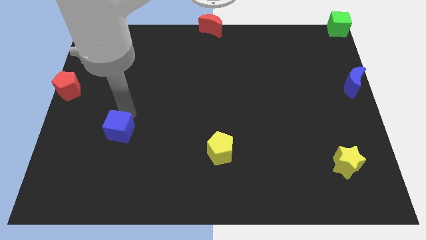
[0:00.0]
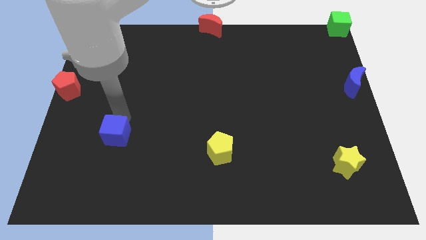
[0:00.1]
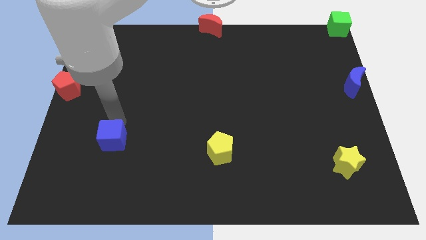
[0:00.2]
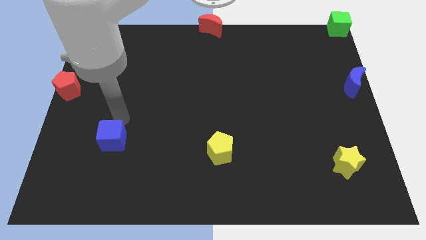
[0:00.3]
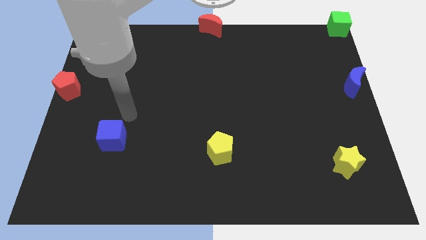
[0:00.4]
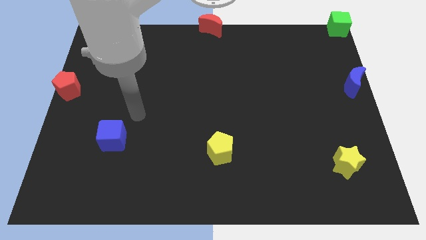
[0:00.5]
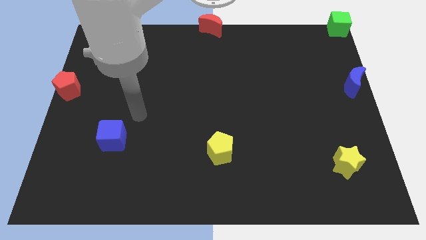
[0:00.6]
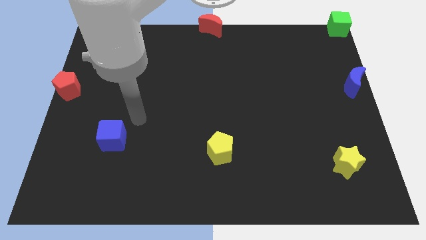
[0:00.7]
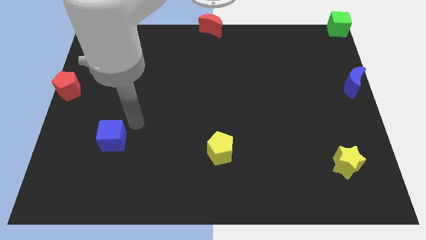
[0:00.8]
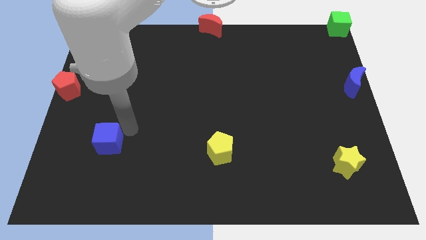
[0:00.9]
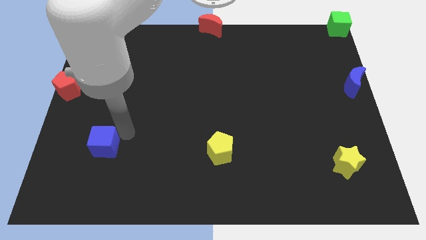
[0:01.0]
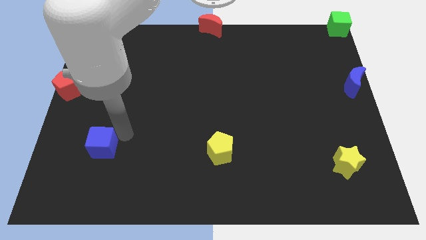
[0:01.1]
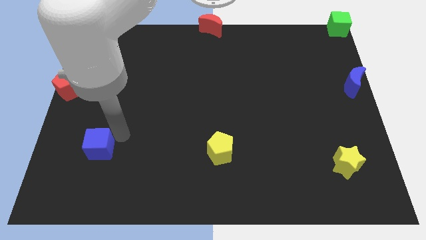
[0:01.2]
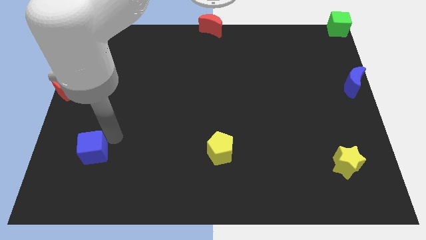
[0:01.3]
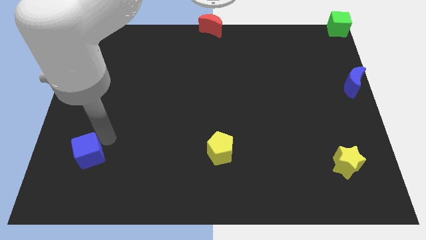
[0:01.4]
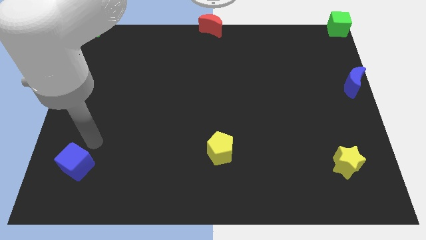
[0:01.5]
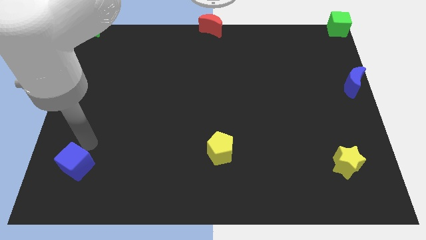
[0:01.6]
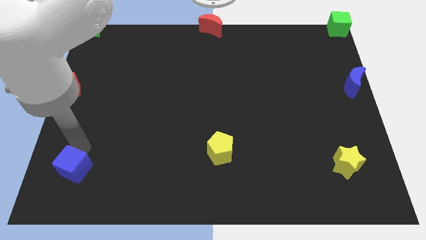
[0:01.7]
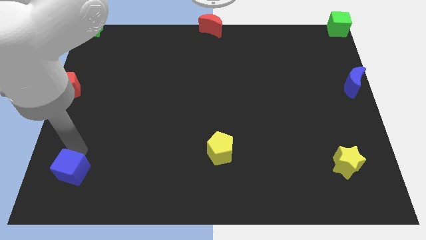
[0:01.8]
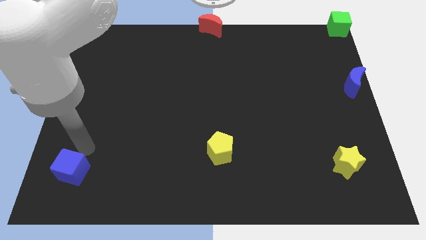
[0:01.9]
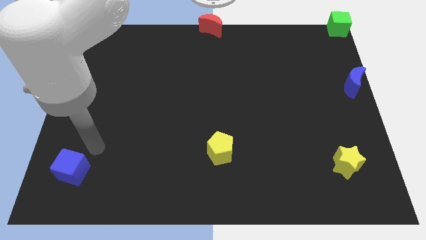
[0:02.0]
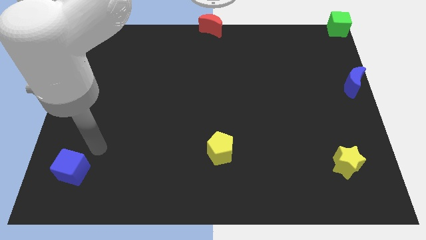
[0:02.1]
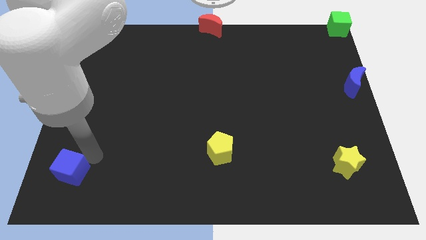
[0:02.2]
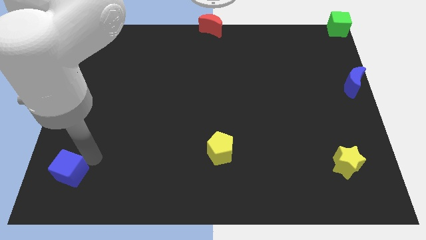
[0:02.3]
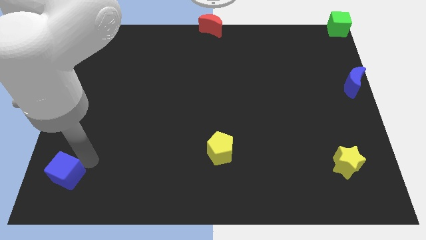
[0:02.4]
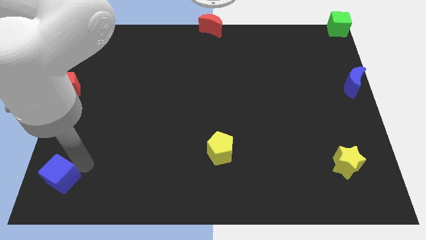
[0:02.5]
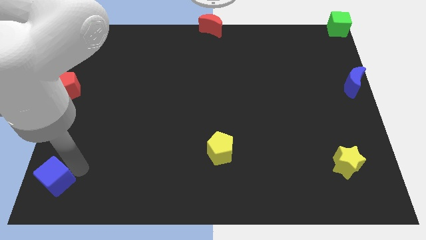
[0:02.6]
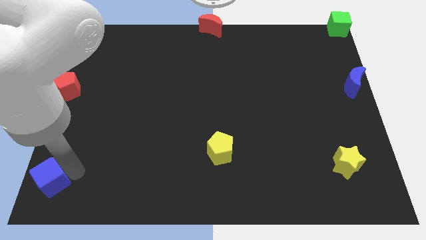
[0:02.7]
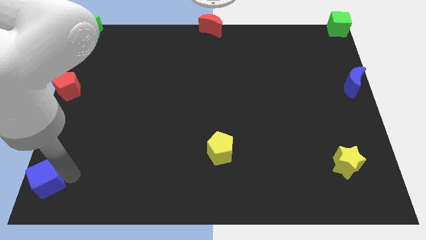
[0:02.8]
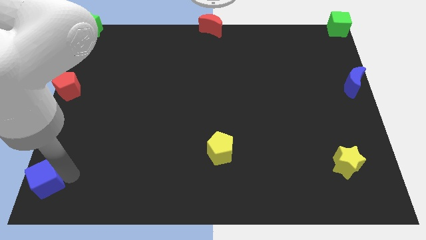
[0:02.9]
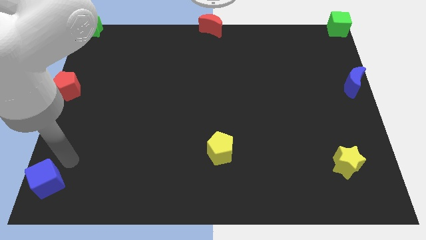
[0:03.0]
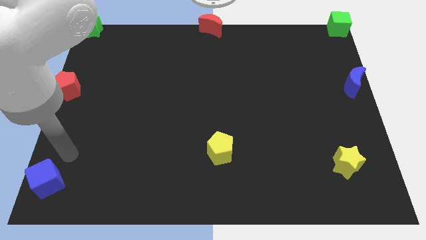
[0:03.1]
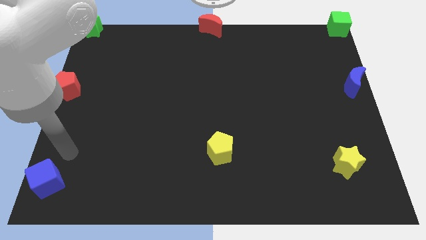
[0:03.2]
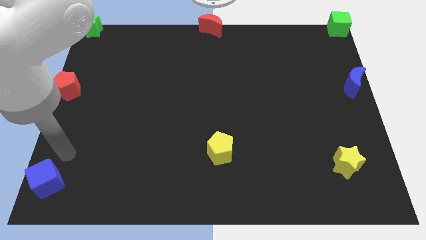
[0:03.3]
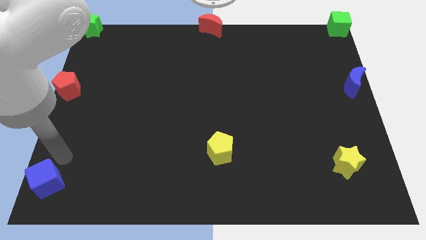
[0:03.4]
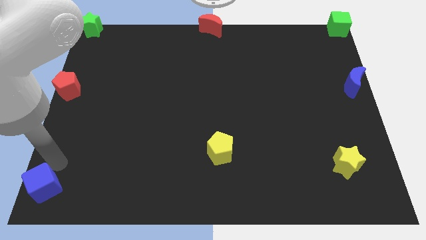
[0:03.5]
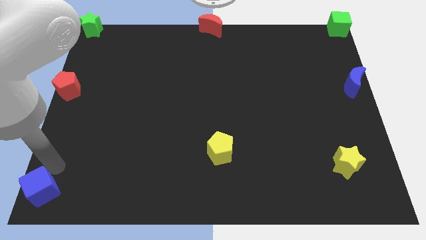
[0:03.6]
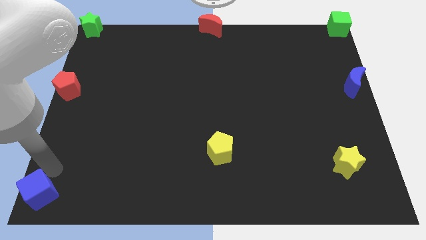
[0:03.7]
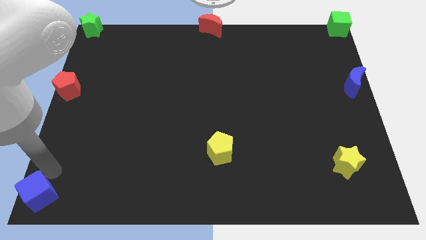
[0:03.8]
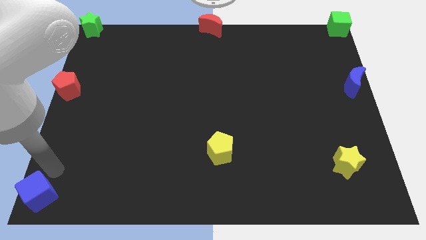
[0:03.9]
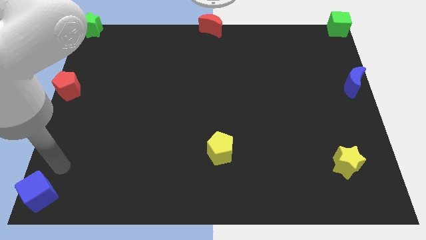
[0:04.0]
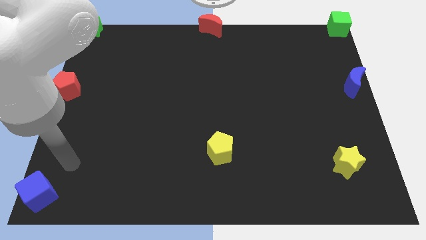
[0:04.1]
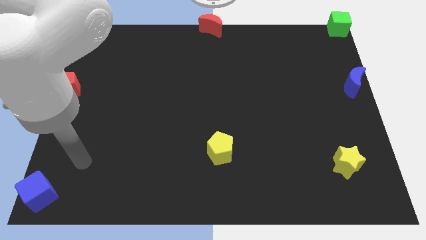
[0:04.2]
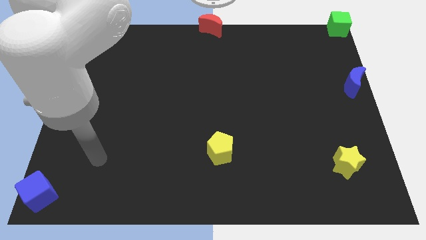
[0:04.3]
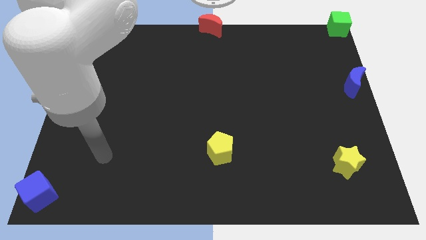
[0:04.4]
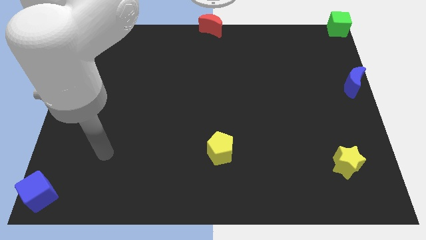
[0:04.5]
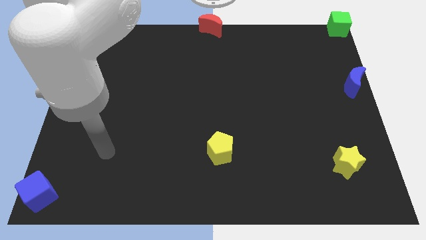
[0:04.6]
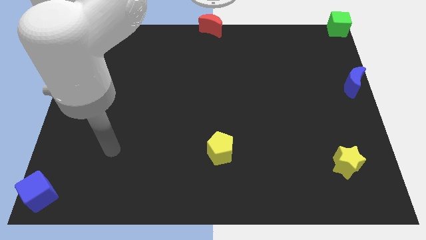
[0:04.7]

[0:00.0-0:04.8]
push the blue cube to the bottom left corner of the board

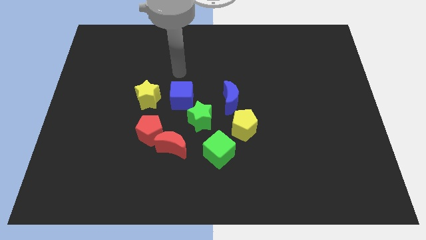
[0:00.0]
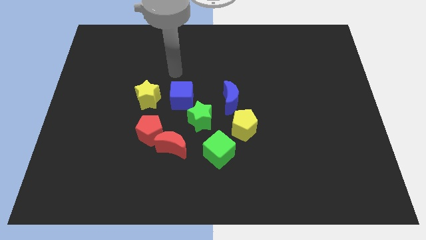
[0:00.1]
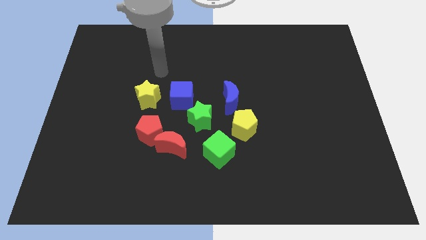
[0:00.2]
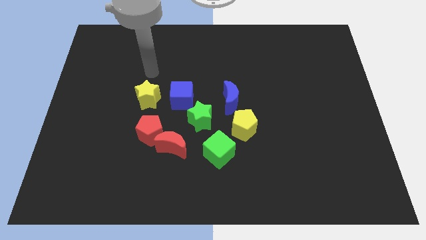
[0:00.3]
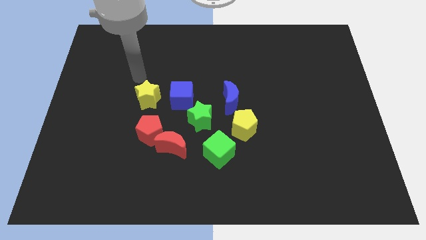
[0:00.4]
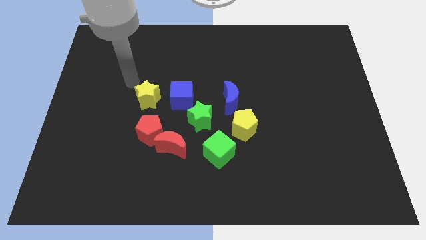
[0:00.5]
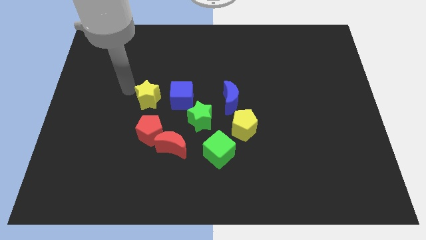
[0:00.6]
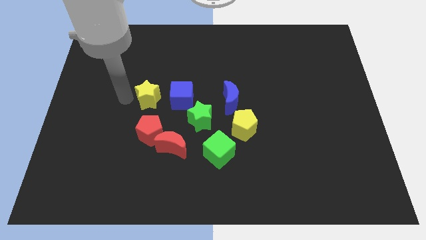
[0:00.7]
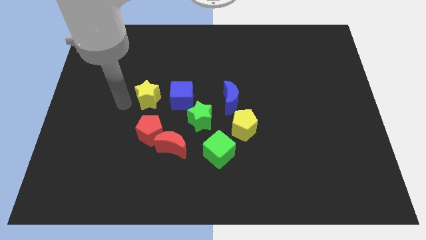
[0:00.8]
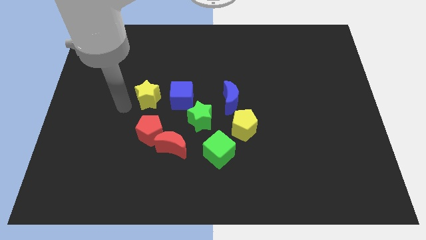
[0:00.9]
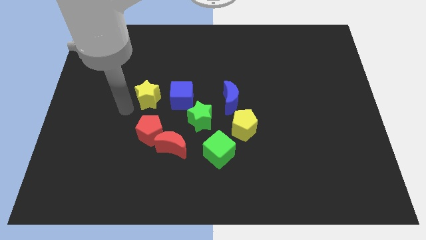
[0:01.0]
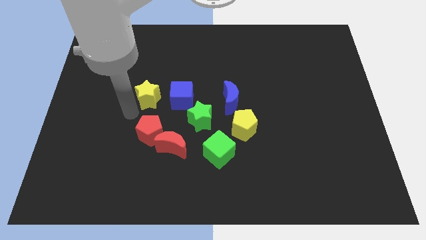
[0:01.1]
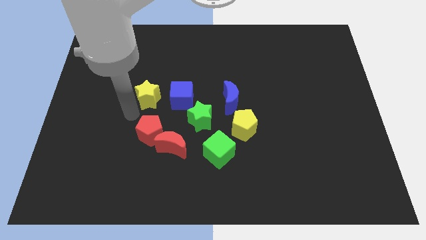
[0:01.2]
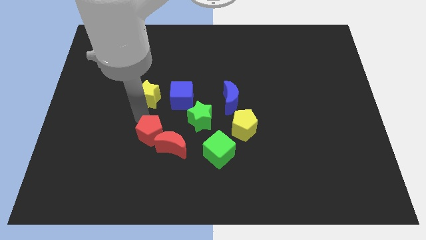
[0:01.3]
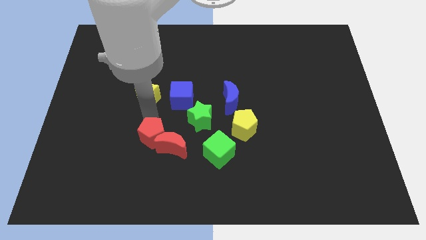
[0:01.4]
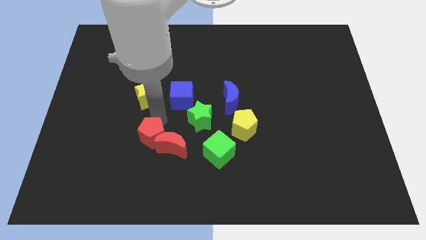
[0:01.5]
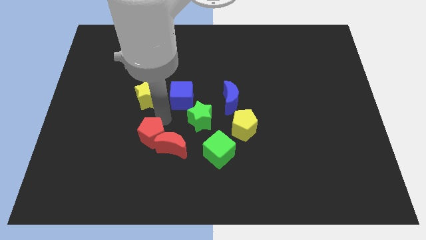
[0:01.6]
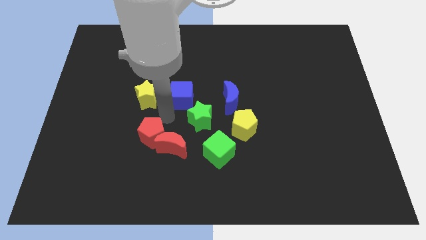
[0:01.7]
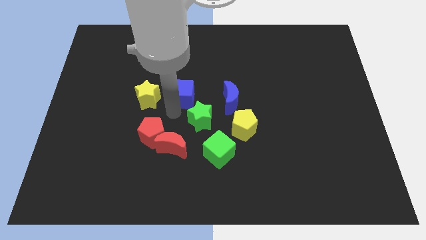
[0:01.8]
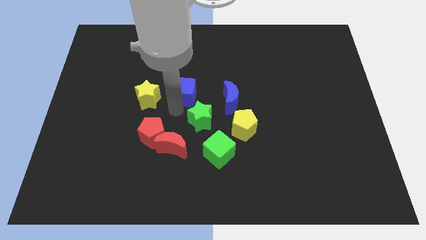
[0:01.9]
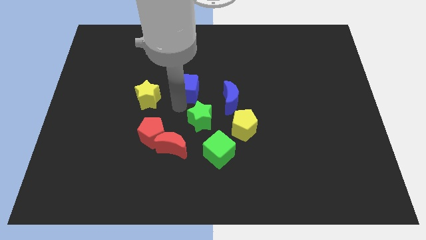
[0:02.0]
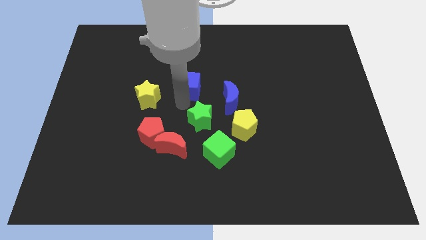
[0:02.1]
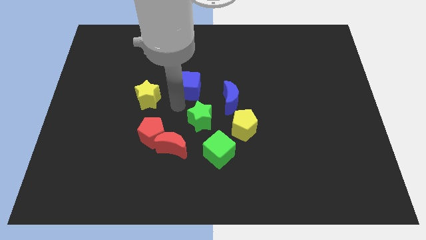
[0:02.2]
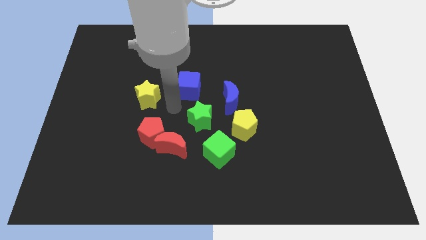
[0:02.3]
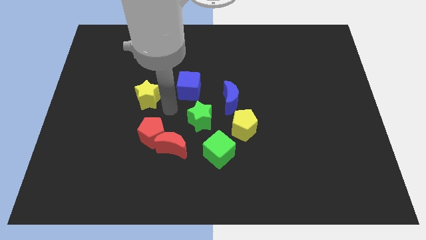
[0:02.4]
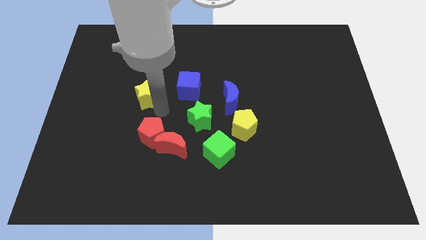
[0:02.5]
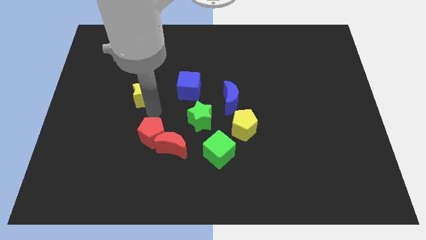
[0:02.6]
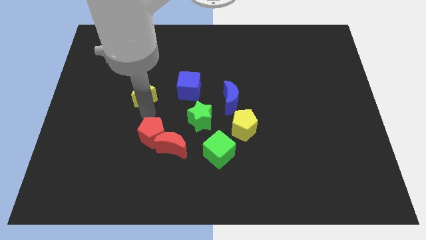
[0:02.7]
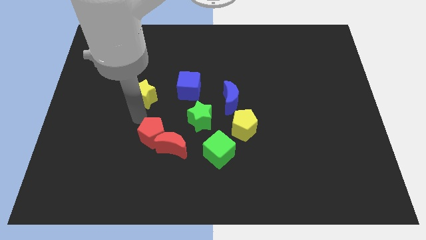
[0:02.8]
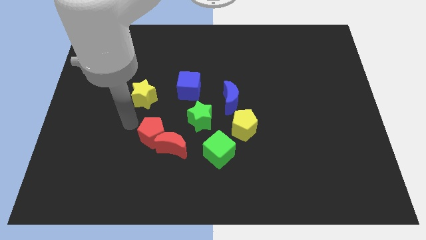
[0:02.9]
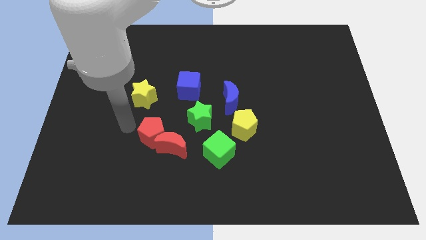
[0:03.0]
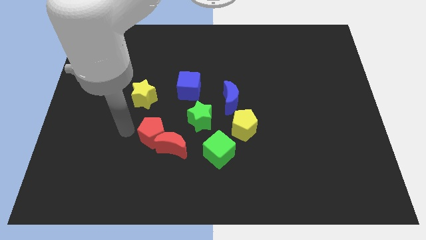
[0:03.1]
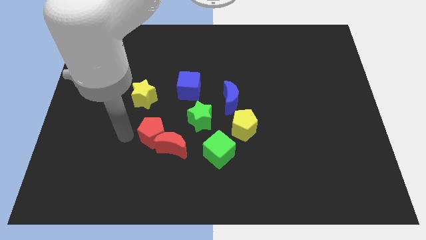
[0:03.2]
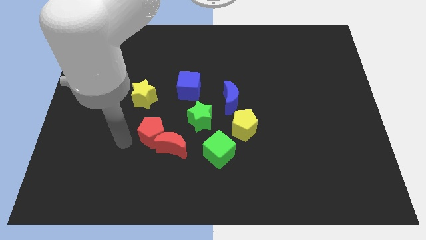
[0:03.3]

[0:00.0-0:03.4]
move the blue cube diagonally top left to the blue moon

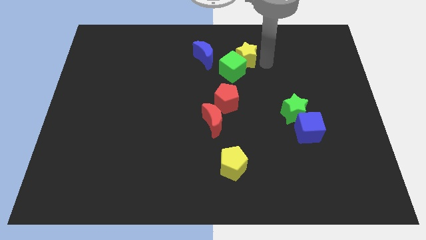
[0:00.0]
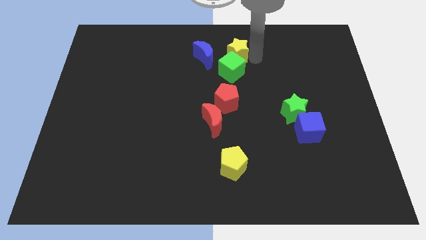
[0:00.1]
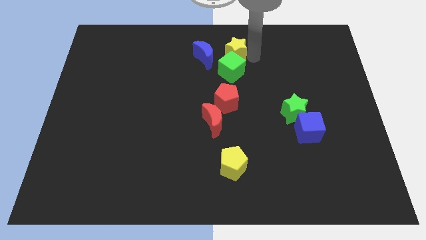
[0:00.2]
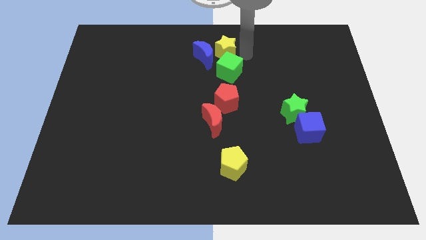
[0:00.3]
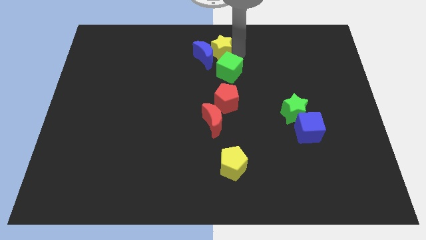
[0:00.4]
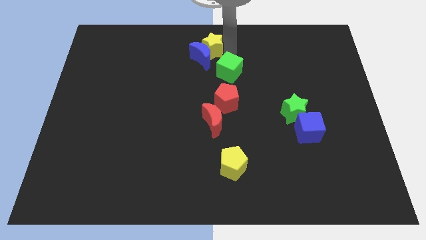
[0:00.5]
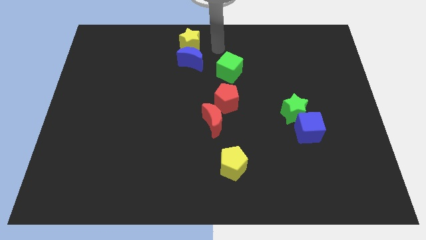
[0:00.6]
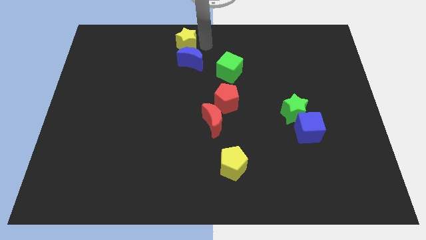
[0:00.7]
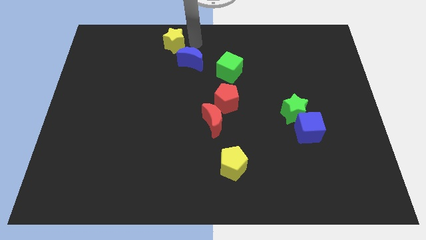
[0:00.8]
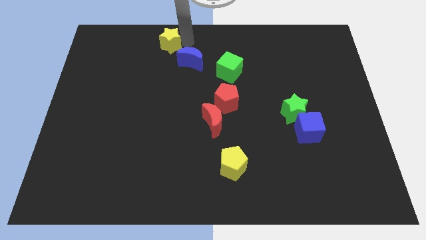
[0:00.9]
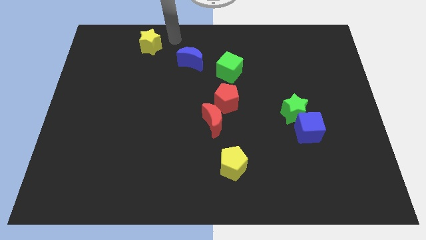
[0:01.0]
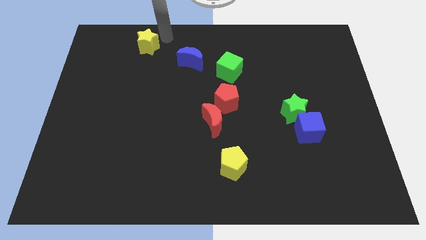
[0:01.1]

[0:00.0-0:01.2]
push the yellow star to the left side of the board
